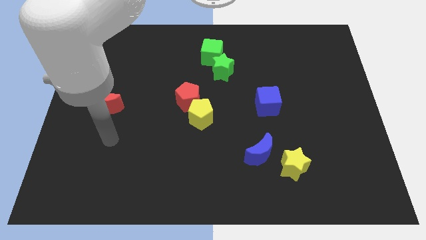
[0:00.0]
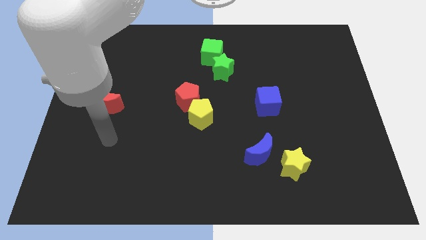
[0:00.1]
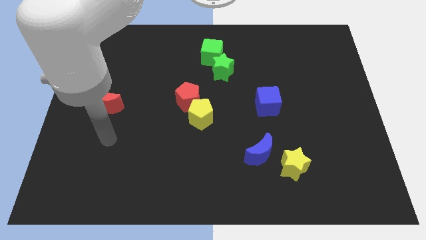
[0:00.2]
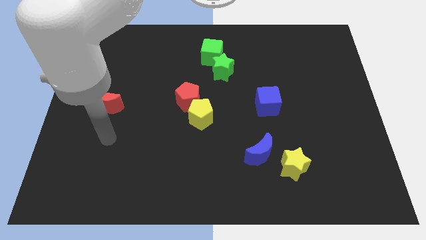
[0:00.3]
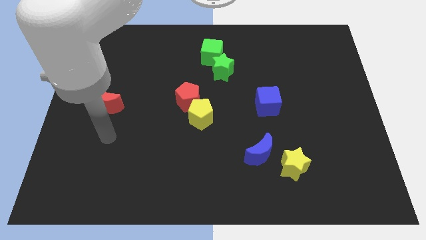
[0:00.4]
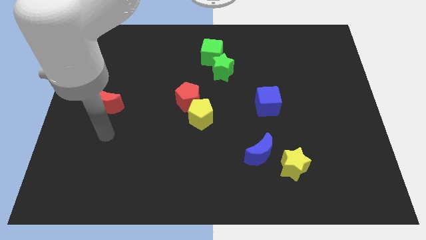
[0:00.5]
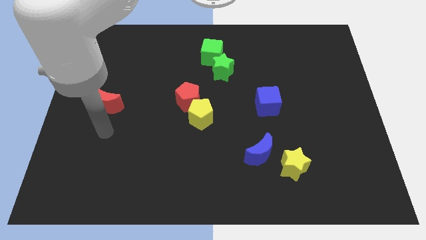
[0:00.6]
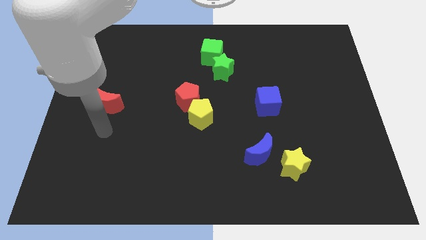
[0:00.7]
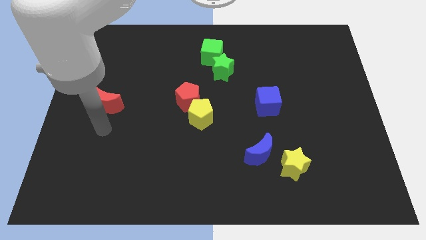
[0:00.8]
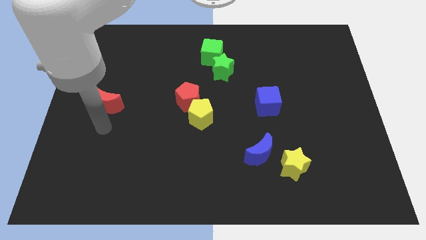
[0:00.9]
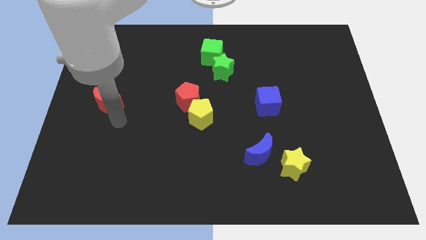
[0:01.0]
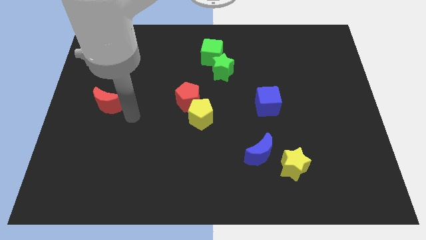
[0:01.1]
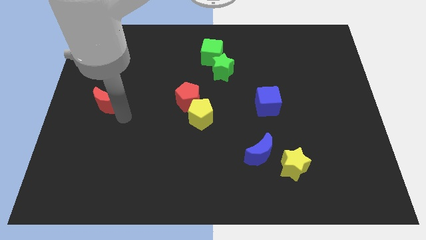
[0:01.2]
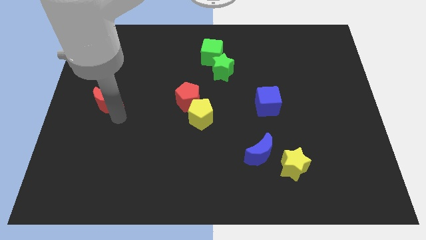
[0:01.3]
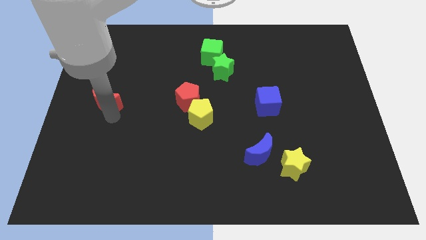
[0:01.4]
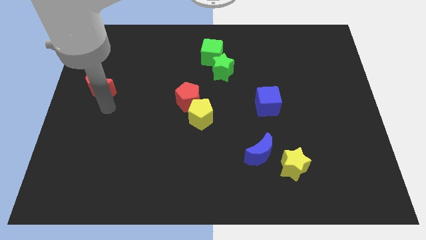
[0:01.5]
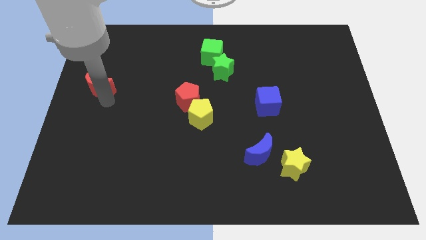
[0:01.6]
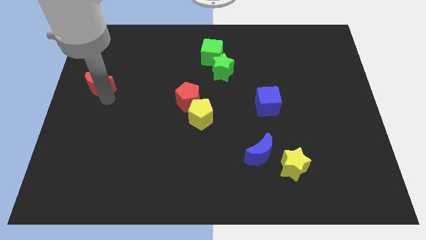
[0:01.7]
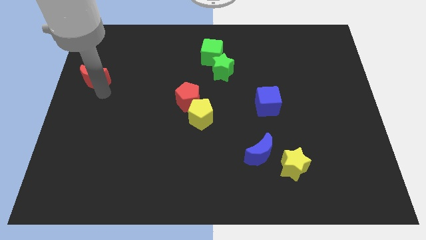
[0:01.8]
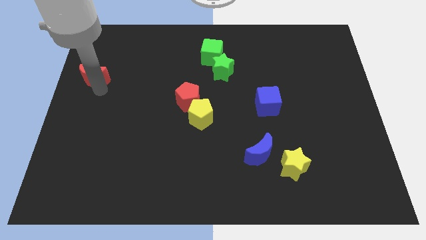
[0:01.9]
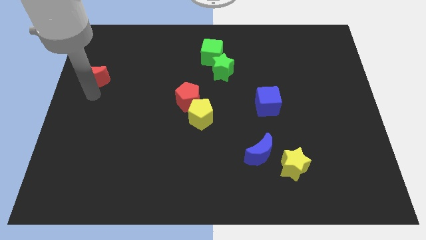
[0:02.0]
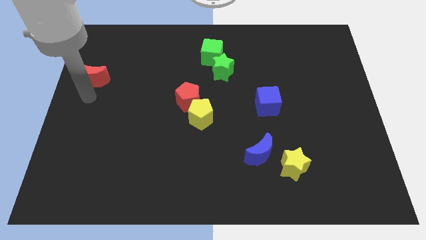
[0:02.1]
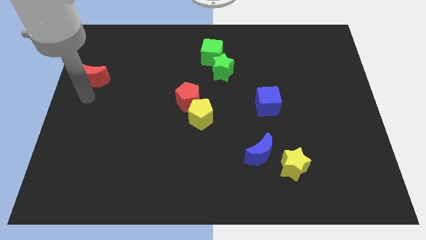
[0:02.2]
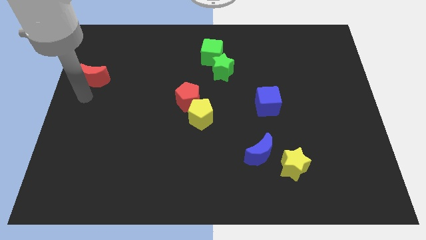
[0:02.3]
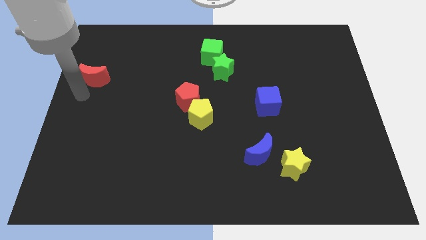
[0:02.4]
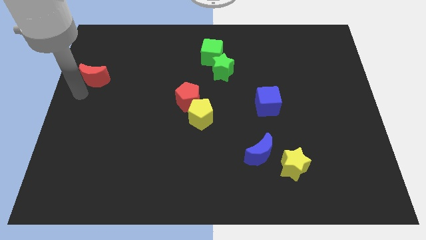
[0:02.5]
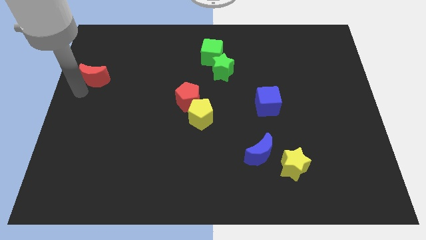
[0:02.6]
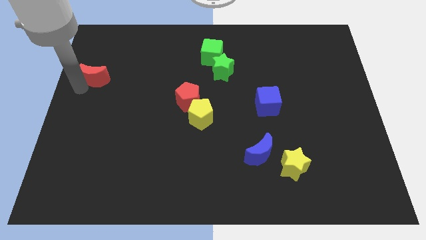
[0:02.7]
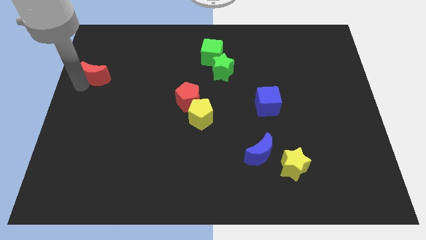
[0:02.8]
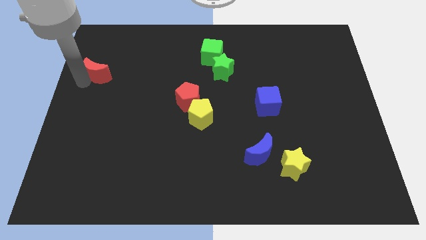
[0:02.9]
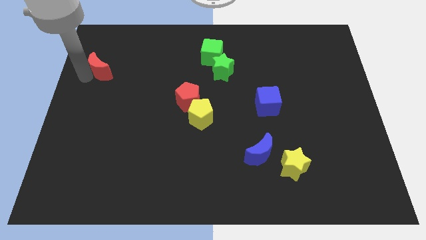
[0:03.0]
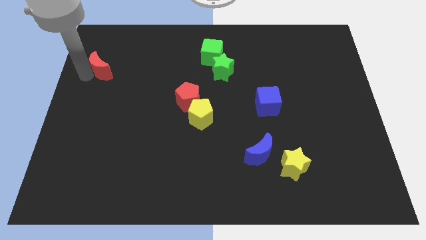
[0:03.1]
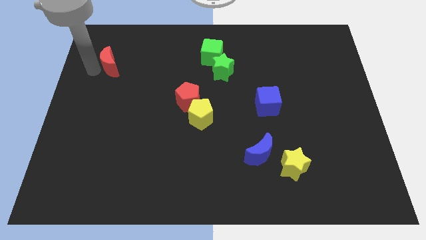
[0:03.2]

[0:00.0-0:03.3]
push the red crescent towards the top left of the table

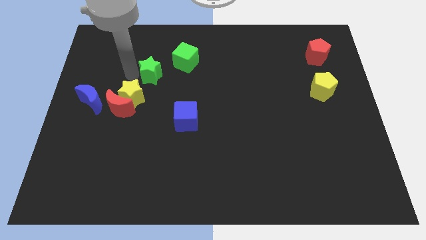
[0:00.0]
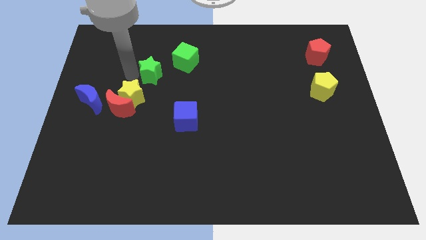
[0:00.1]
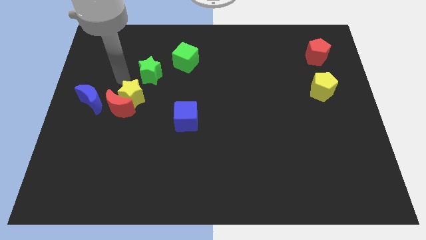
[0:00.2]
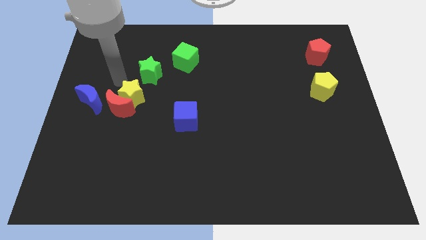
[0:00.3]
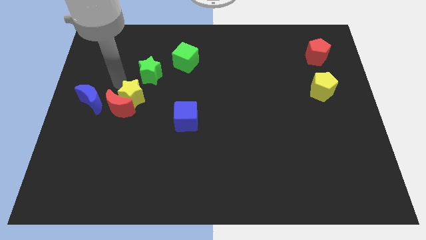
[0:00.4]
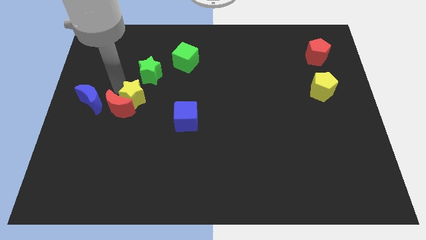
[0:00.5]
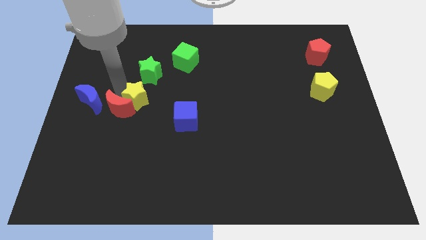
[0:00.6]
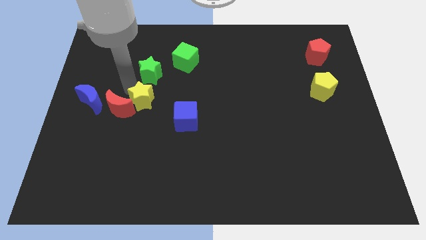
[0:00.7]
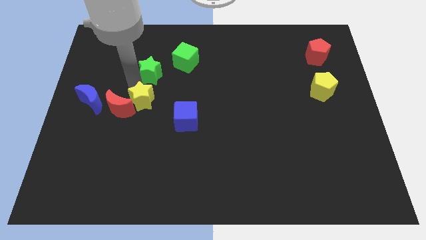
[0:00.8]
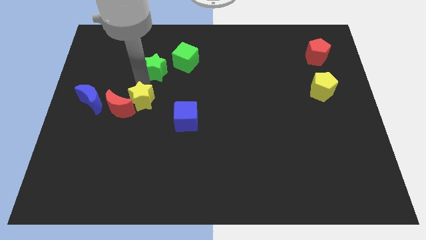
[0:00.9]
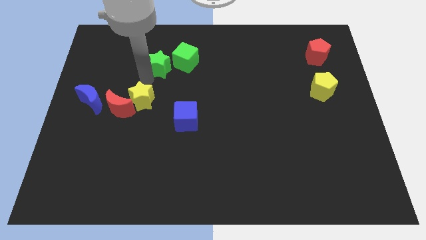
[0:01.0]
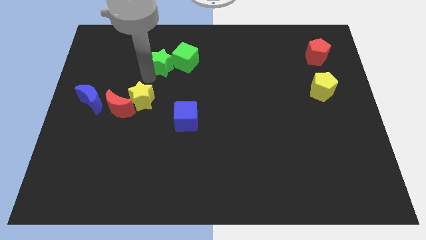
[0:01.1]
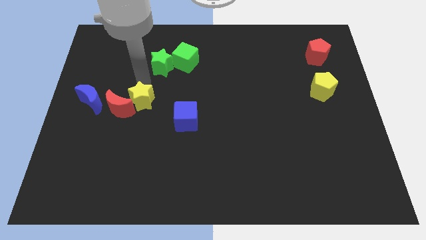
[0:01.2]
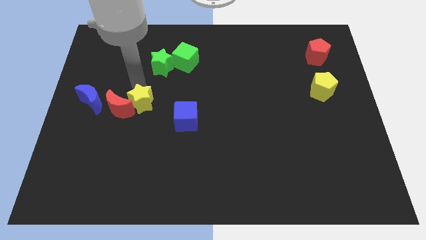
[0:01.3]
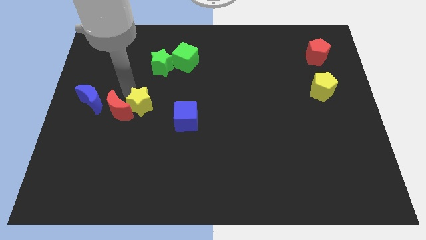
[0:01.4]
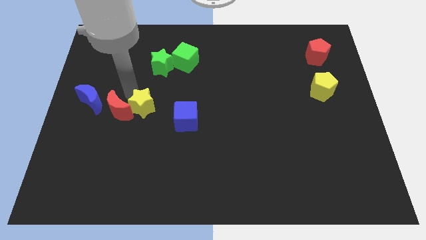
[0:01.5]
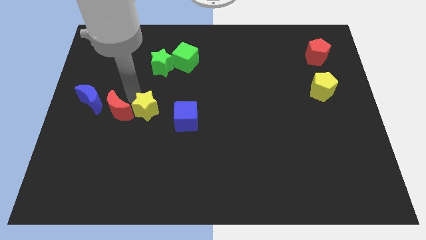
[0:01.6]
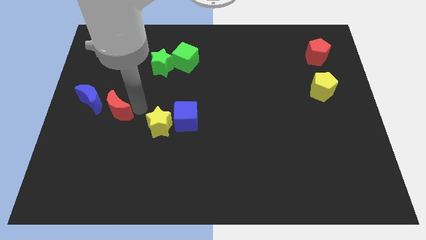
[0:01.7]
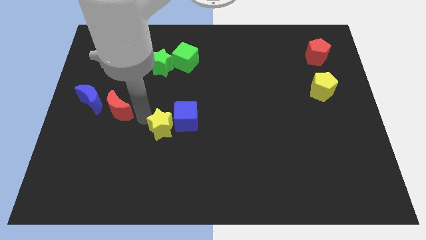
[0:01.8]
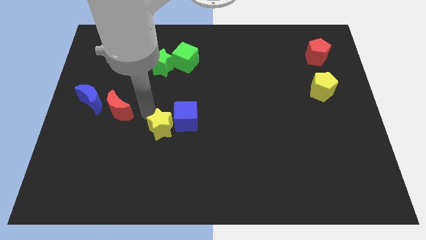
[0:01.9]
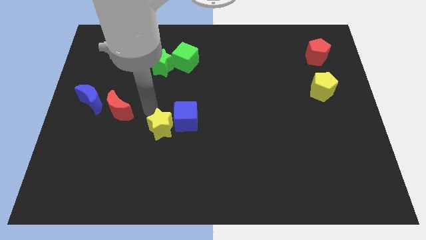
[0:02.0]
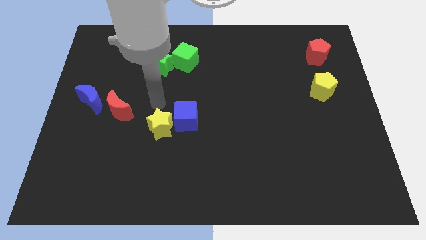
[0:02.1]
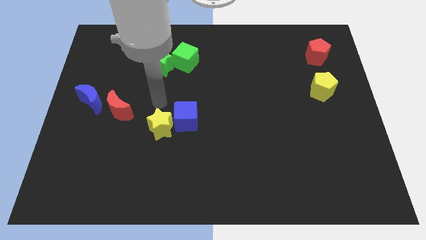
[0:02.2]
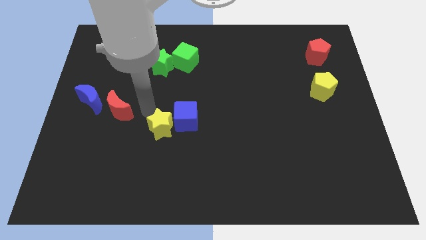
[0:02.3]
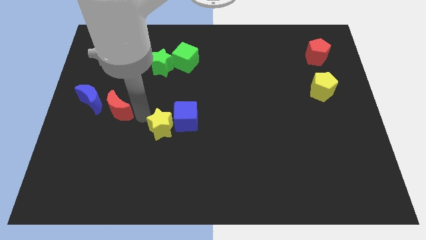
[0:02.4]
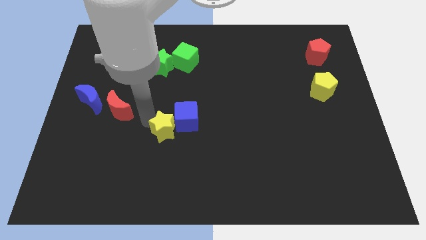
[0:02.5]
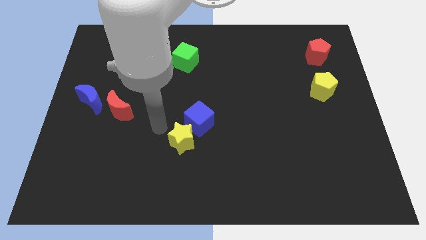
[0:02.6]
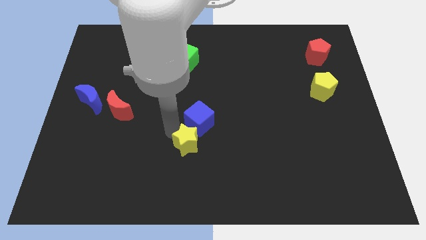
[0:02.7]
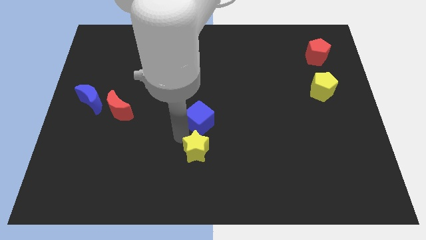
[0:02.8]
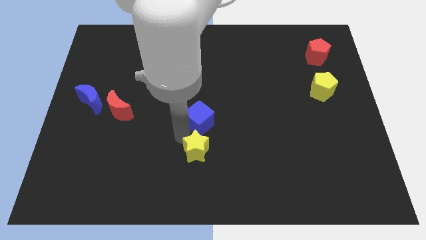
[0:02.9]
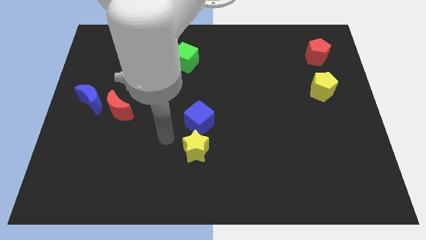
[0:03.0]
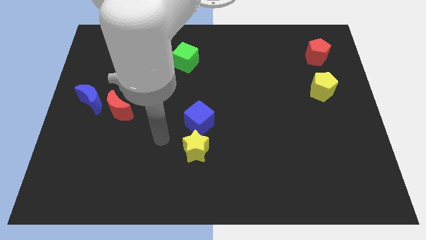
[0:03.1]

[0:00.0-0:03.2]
place yellow star to the bottom of blue cube

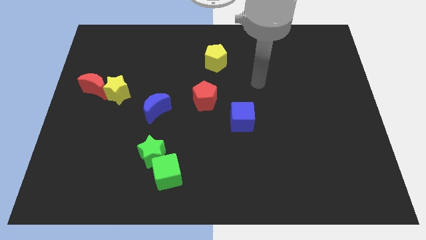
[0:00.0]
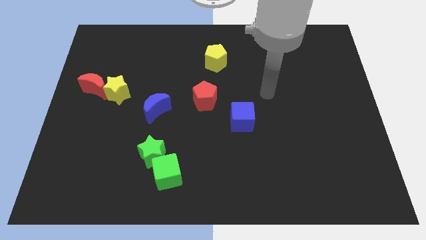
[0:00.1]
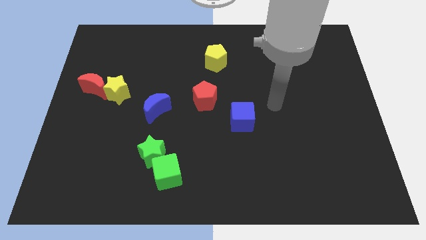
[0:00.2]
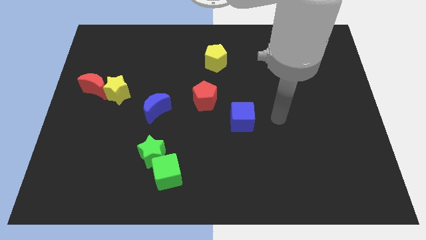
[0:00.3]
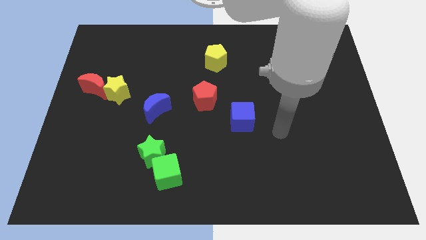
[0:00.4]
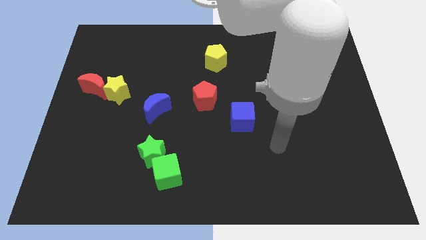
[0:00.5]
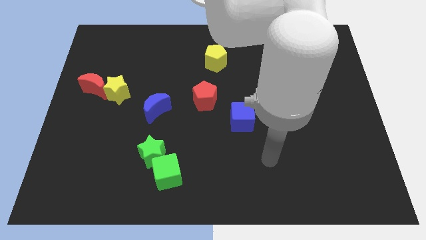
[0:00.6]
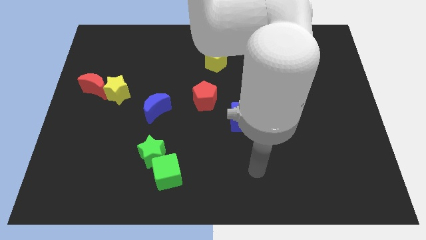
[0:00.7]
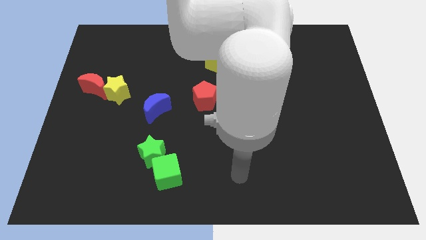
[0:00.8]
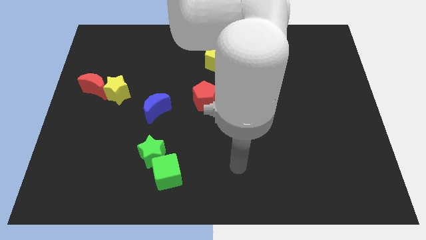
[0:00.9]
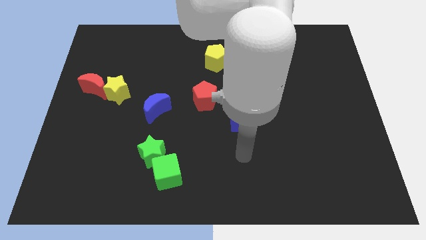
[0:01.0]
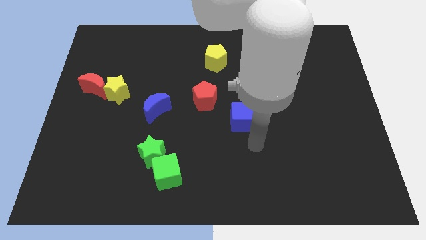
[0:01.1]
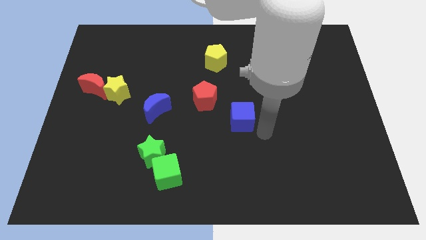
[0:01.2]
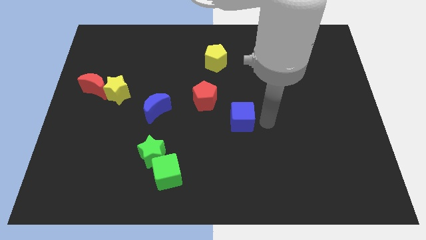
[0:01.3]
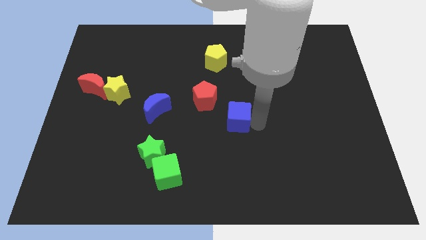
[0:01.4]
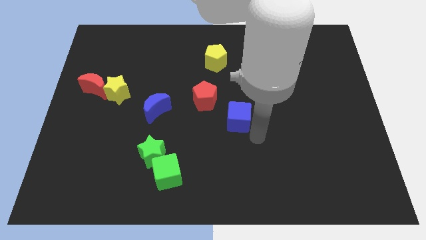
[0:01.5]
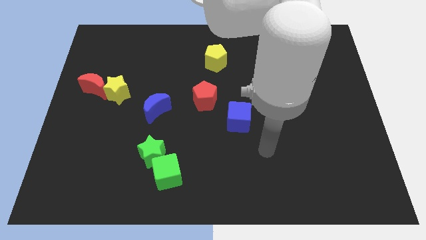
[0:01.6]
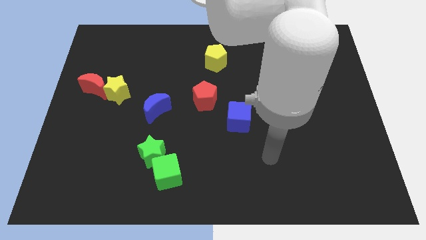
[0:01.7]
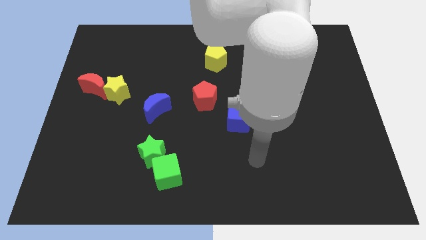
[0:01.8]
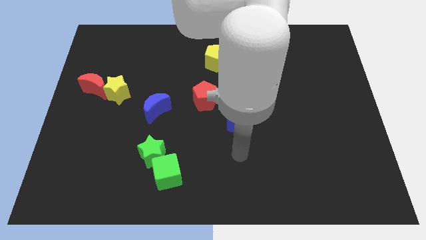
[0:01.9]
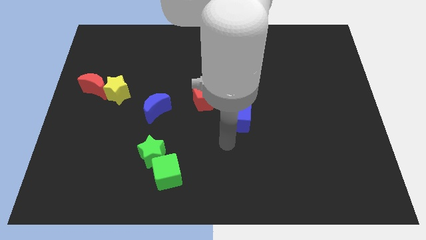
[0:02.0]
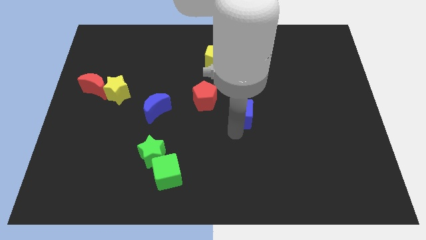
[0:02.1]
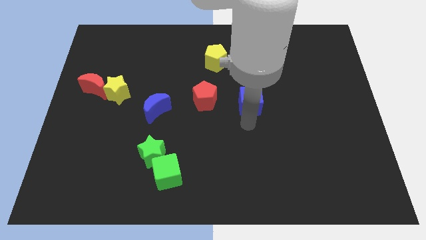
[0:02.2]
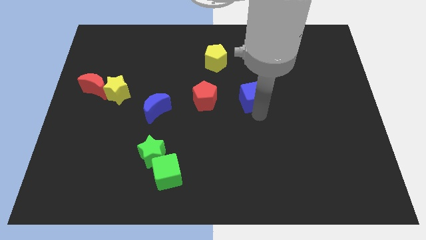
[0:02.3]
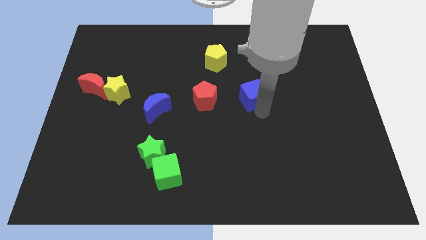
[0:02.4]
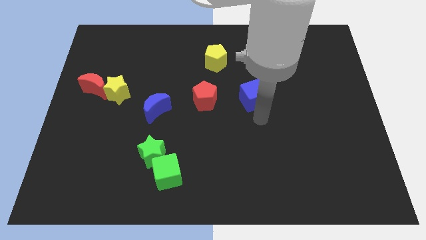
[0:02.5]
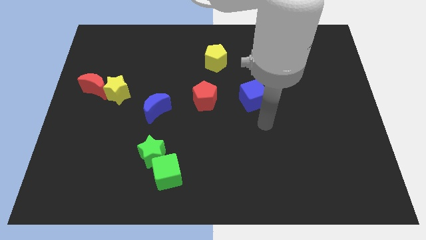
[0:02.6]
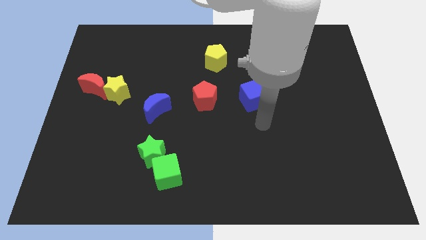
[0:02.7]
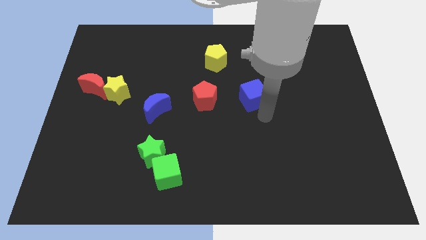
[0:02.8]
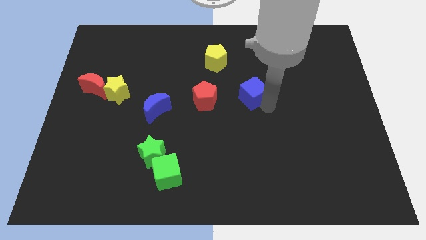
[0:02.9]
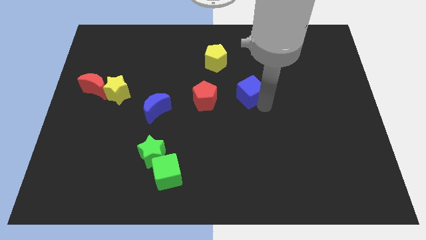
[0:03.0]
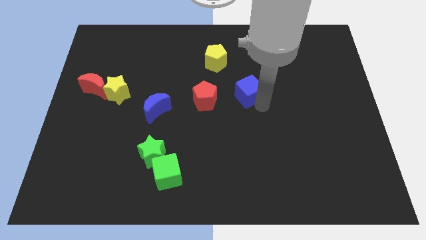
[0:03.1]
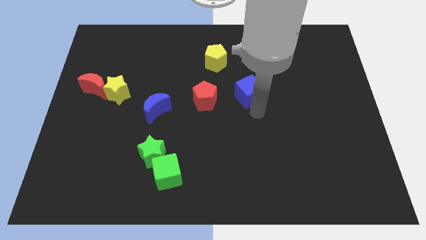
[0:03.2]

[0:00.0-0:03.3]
move the blue cube parallel to the red pentagon
